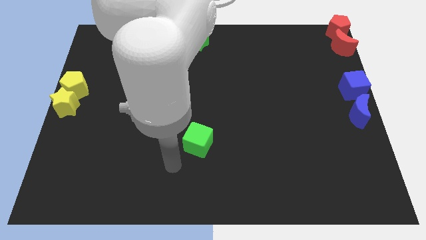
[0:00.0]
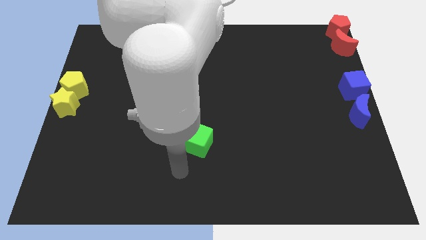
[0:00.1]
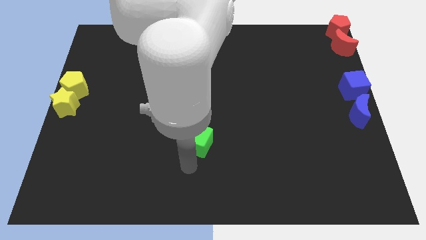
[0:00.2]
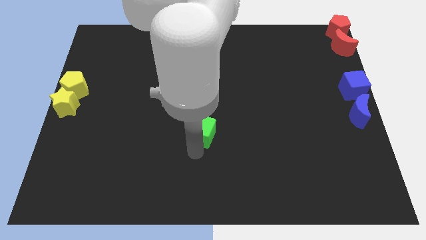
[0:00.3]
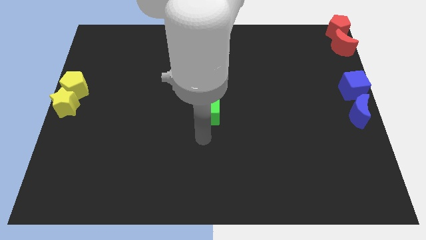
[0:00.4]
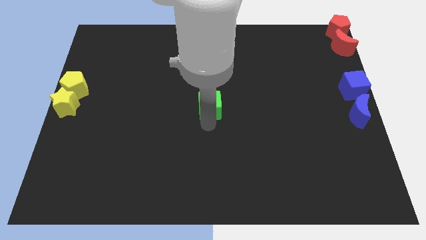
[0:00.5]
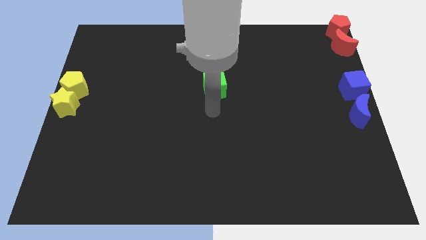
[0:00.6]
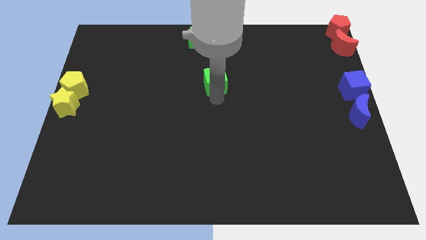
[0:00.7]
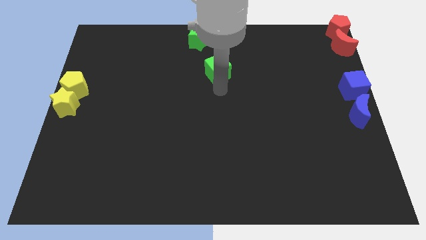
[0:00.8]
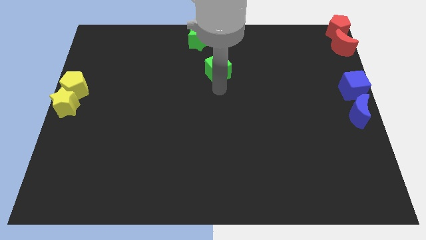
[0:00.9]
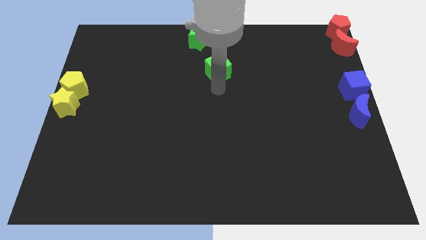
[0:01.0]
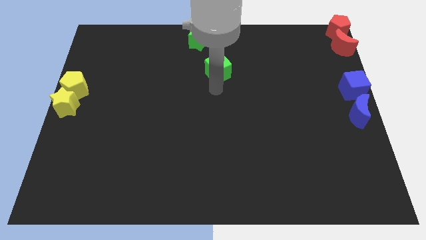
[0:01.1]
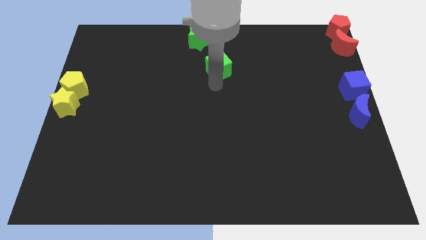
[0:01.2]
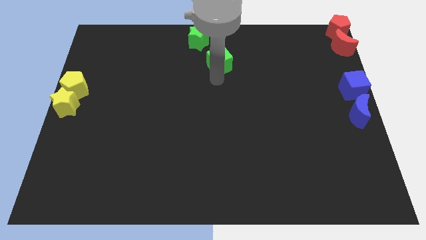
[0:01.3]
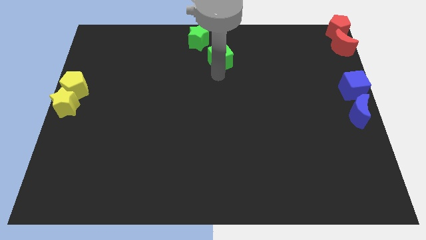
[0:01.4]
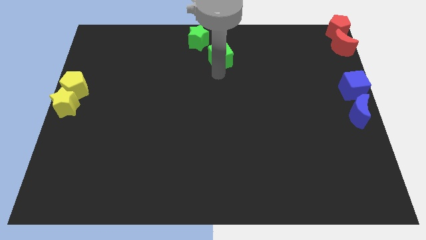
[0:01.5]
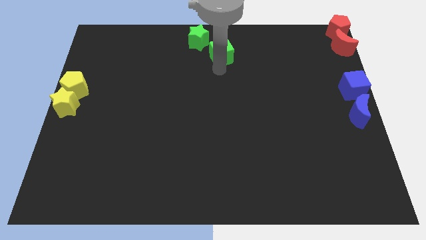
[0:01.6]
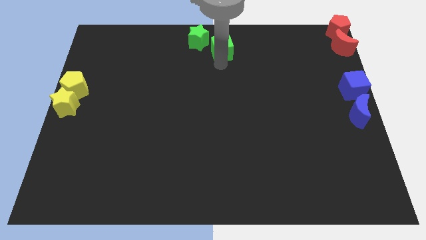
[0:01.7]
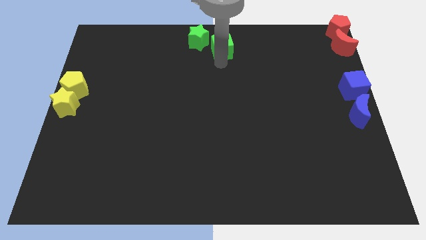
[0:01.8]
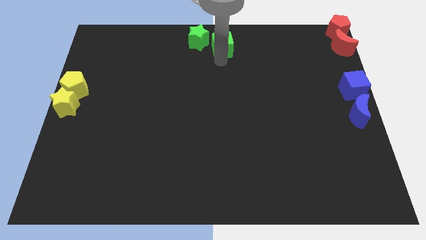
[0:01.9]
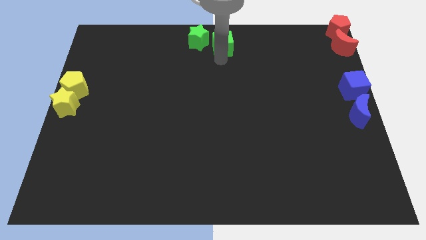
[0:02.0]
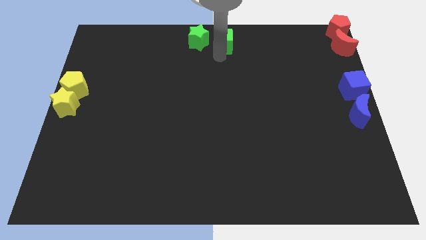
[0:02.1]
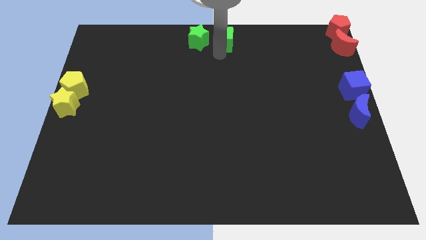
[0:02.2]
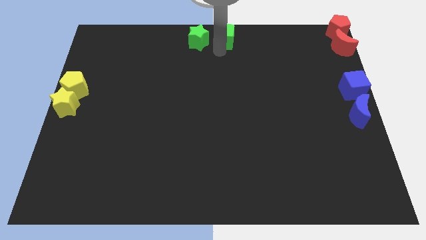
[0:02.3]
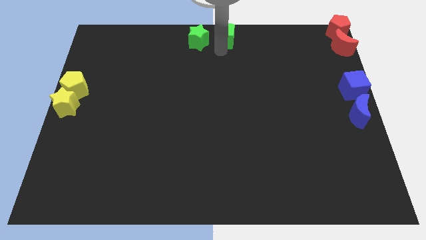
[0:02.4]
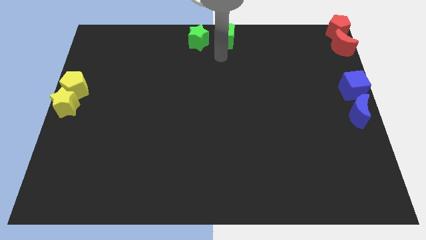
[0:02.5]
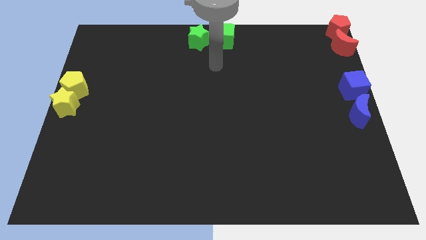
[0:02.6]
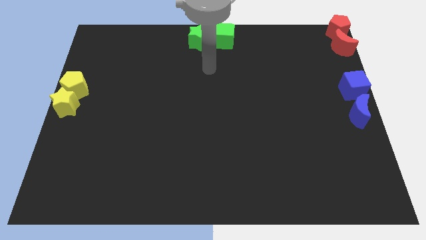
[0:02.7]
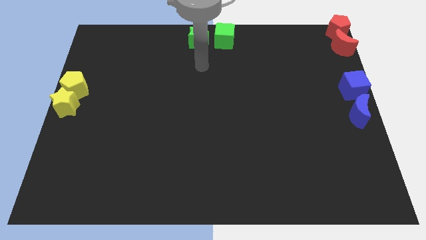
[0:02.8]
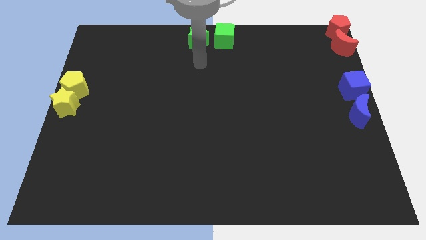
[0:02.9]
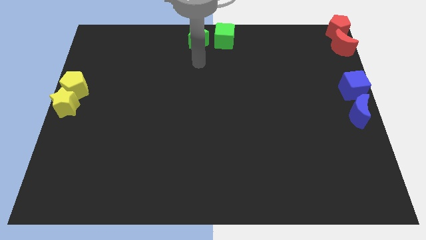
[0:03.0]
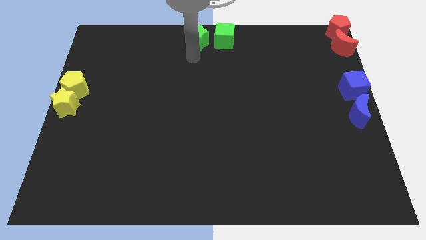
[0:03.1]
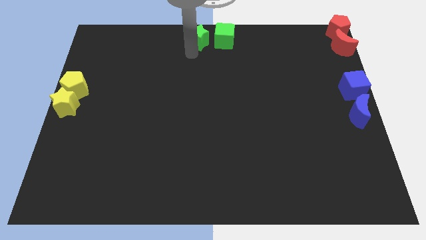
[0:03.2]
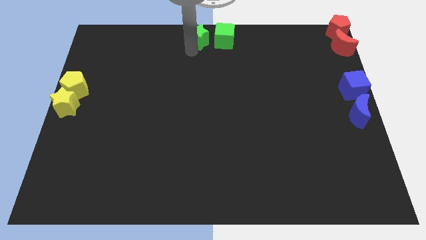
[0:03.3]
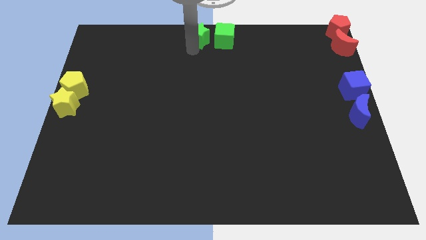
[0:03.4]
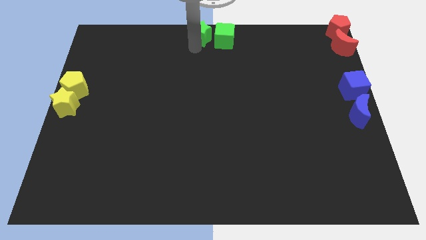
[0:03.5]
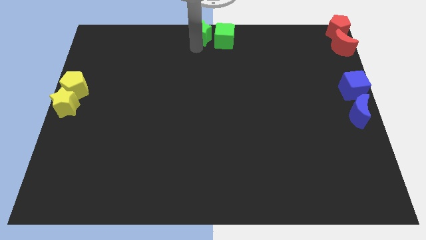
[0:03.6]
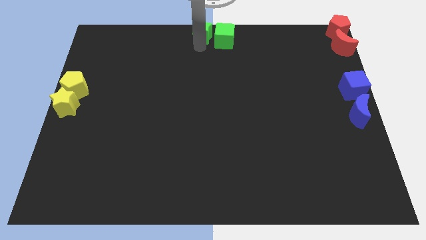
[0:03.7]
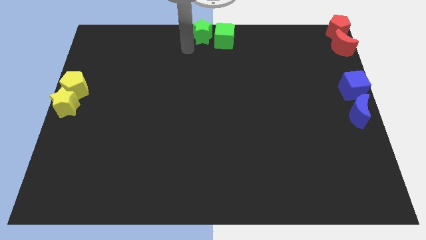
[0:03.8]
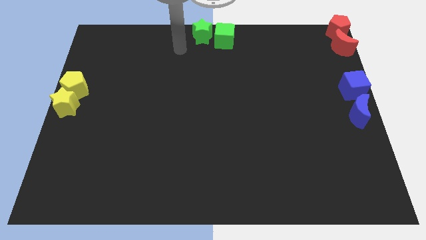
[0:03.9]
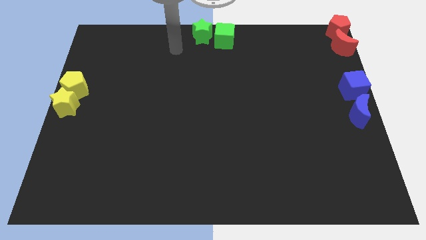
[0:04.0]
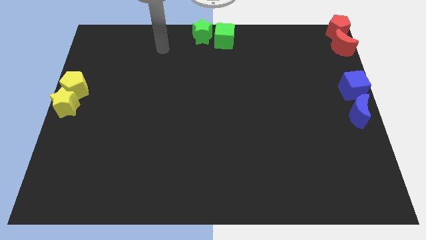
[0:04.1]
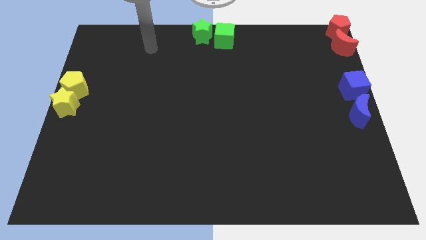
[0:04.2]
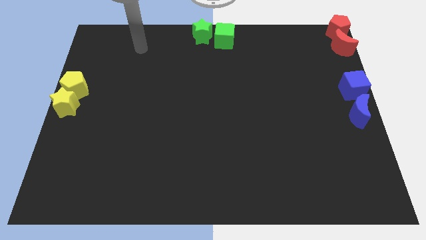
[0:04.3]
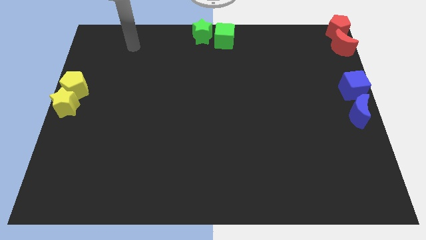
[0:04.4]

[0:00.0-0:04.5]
push the green cube to the right of the green star

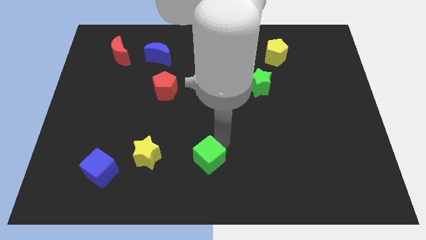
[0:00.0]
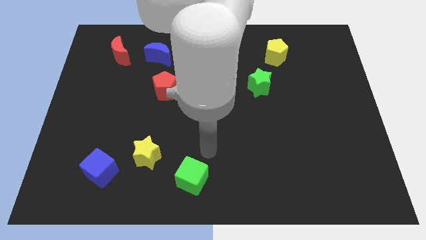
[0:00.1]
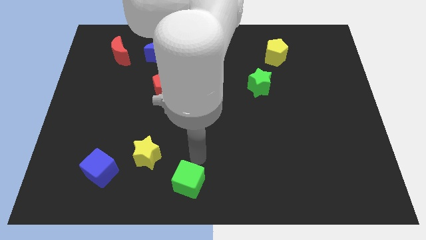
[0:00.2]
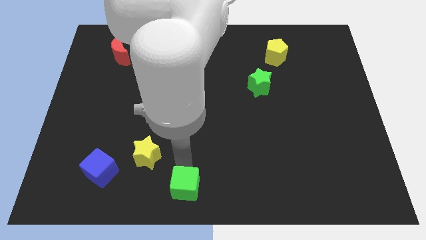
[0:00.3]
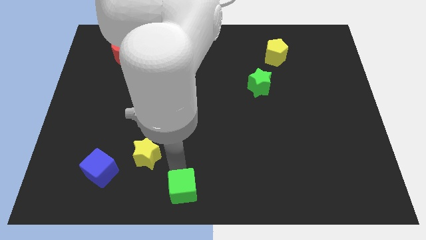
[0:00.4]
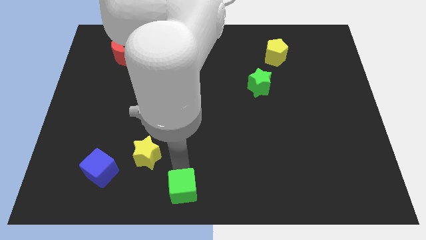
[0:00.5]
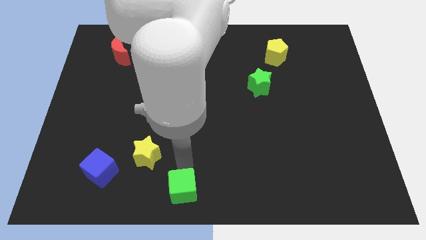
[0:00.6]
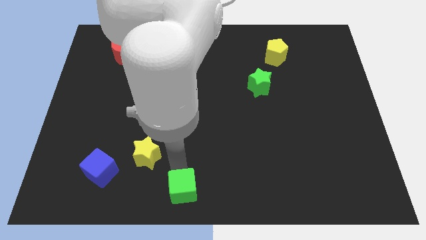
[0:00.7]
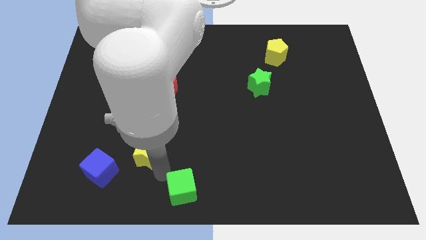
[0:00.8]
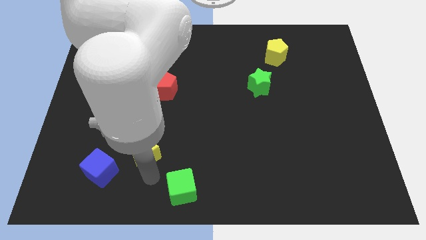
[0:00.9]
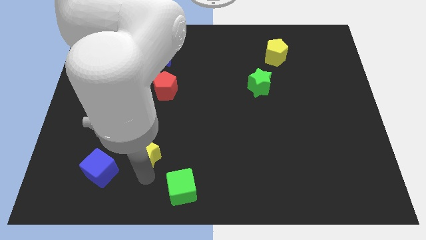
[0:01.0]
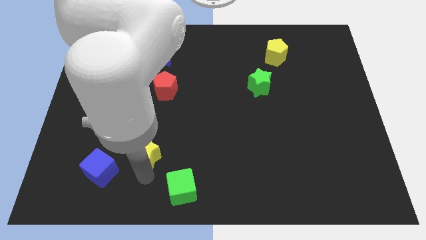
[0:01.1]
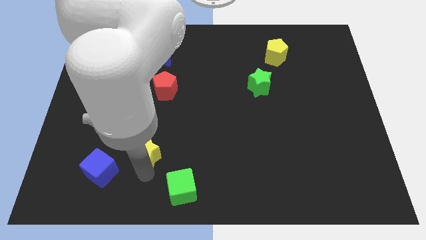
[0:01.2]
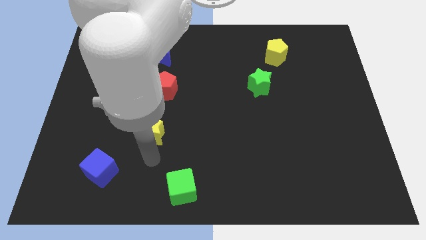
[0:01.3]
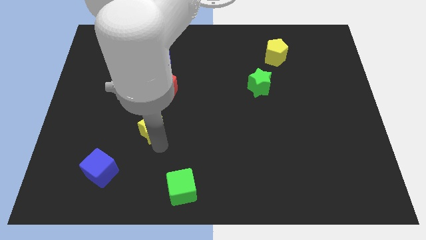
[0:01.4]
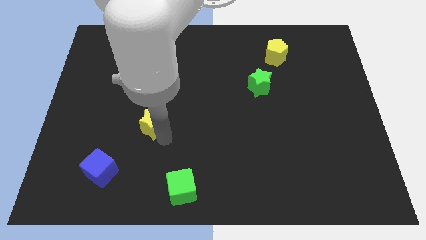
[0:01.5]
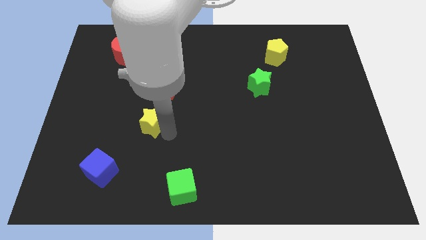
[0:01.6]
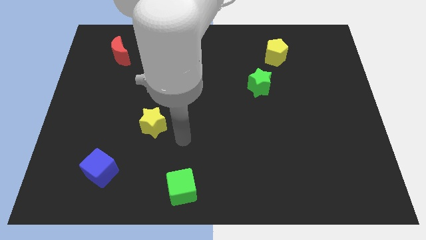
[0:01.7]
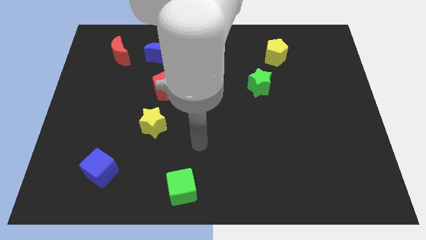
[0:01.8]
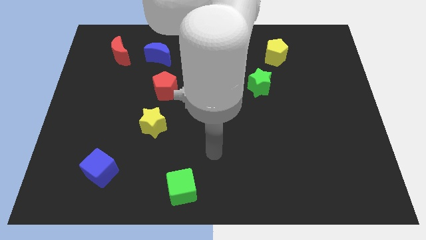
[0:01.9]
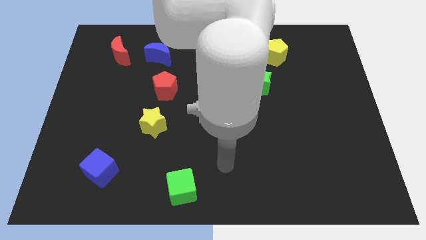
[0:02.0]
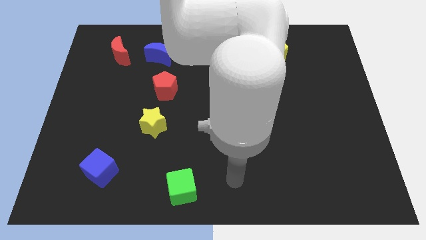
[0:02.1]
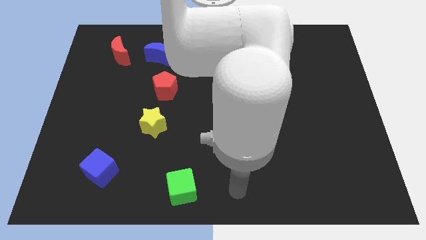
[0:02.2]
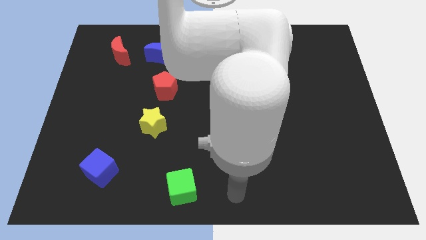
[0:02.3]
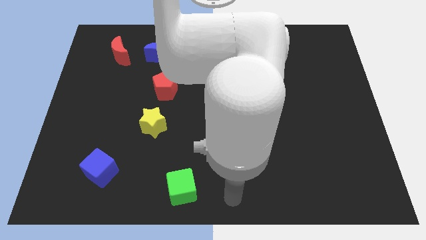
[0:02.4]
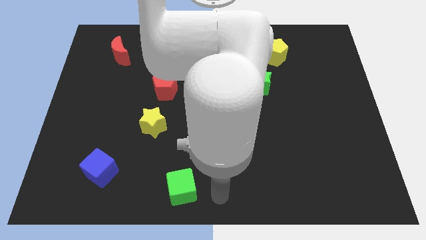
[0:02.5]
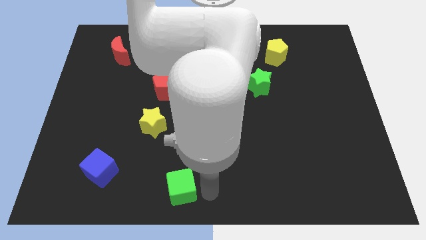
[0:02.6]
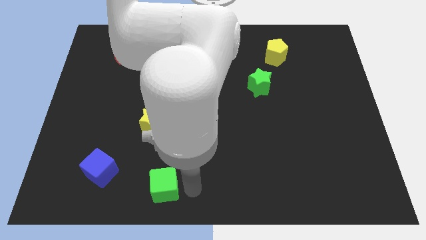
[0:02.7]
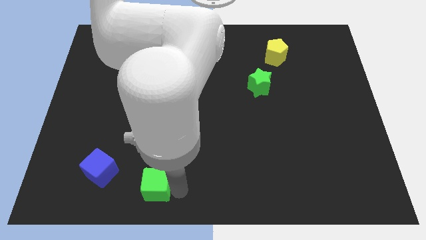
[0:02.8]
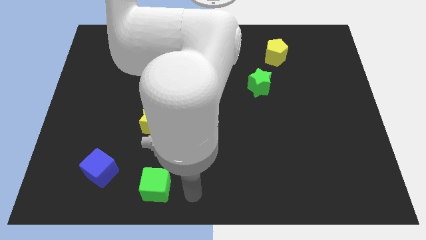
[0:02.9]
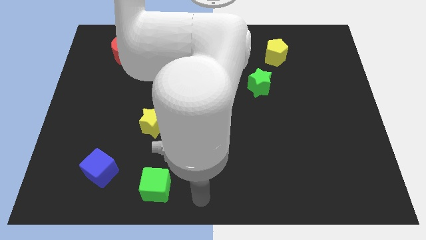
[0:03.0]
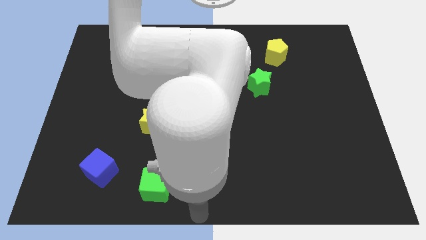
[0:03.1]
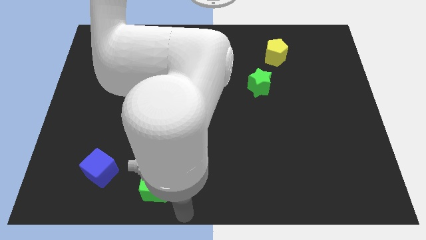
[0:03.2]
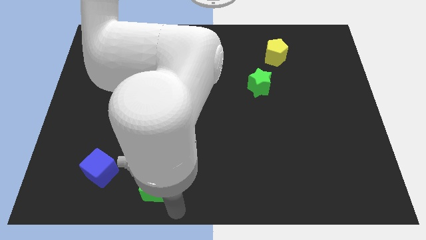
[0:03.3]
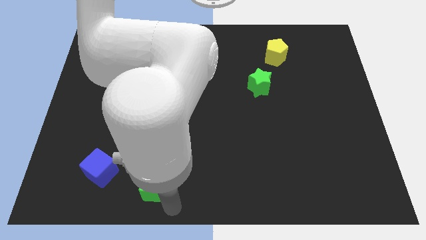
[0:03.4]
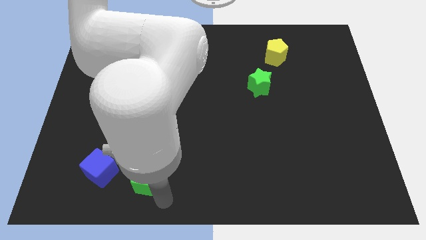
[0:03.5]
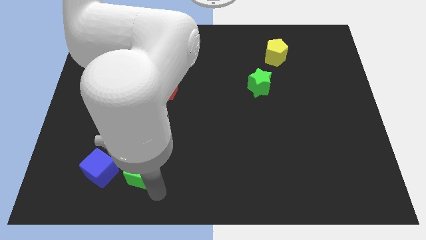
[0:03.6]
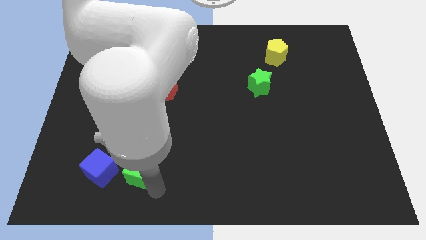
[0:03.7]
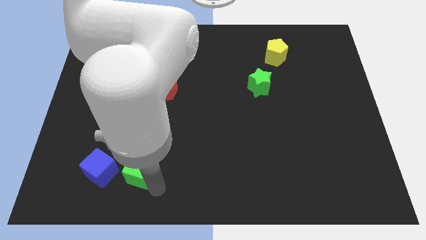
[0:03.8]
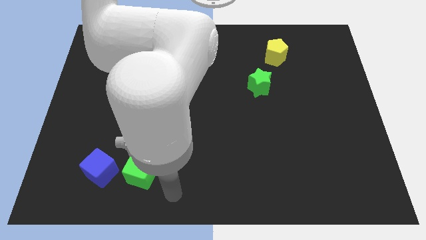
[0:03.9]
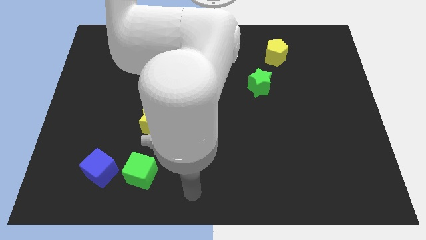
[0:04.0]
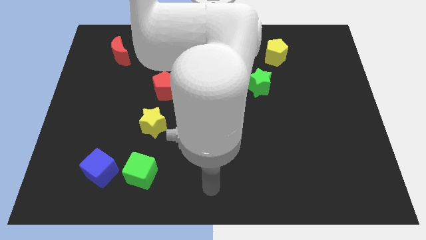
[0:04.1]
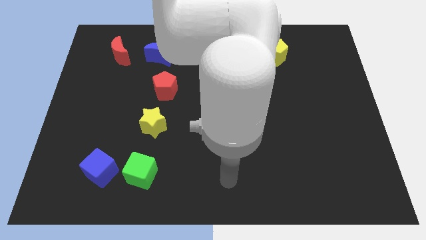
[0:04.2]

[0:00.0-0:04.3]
place the yellow star and green cube in a vertical line below the red pentagon

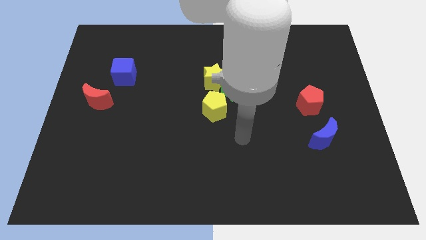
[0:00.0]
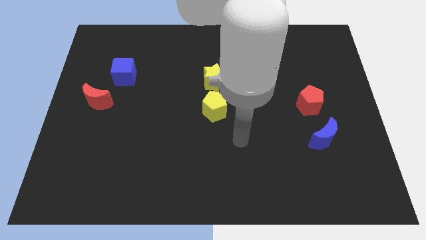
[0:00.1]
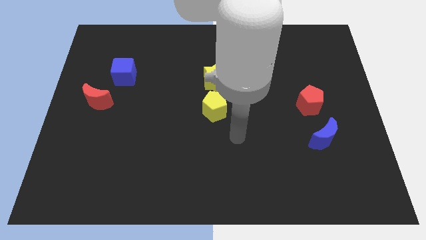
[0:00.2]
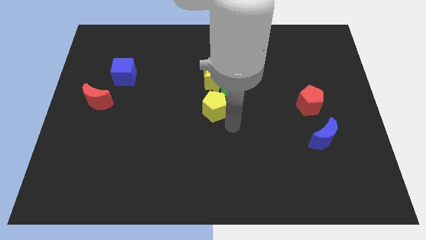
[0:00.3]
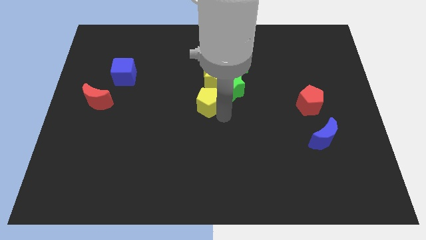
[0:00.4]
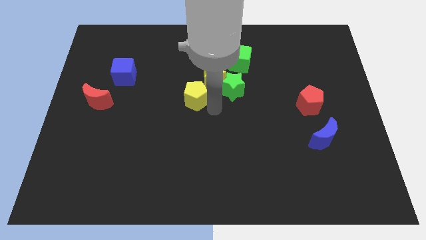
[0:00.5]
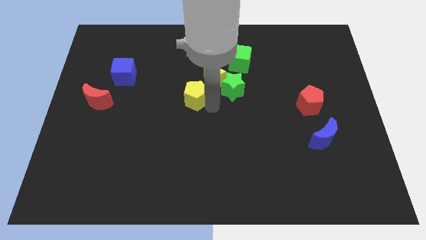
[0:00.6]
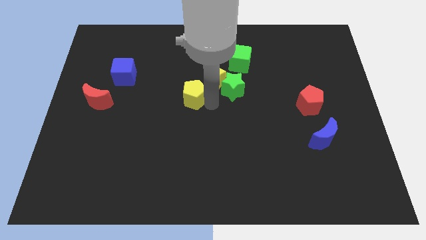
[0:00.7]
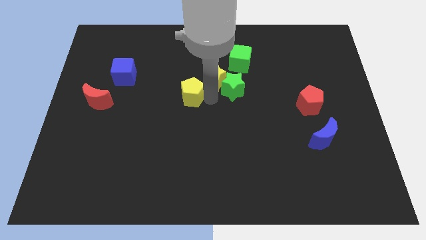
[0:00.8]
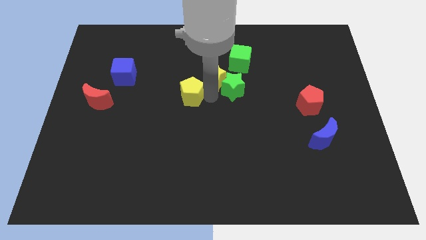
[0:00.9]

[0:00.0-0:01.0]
place the yellow pentagon towards the bottom left side of the yellow star
